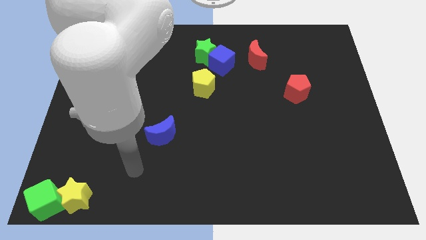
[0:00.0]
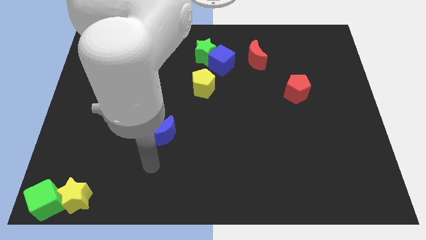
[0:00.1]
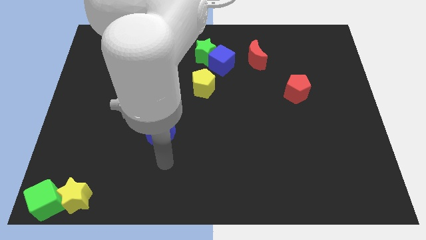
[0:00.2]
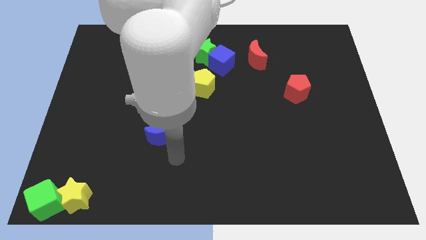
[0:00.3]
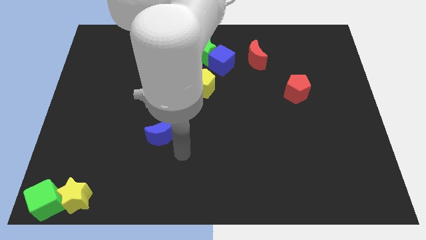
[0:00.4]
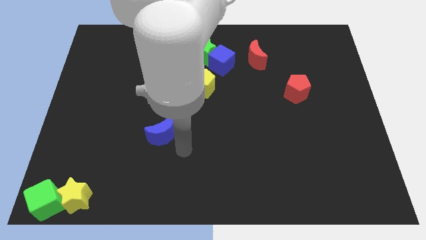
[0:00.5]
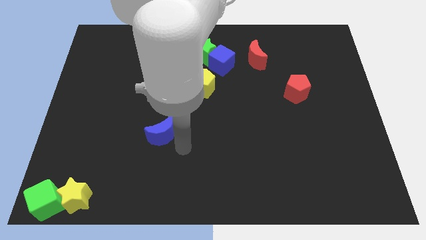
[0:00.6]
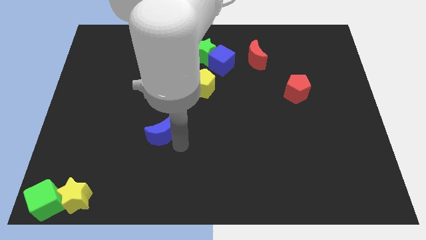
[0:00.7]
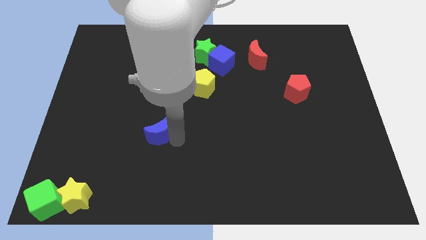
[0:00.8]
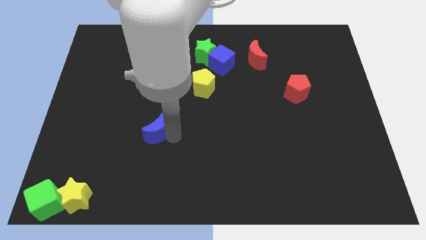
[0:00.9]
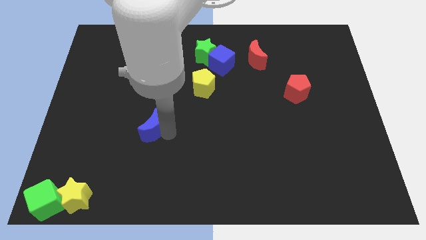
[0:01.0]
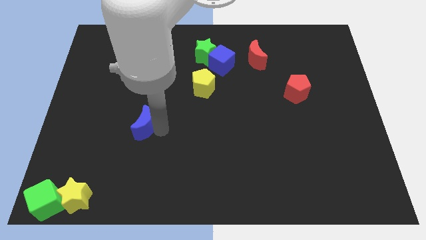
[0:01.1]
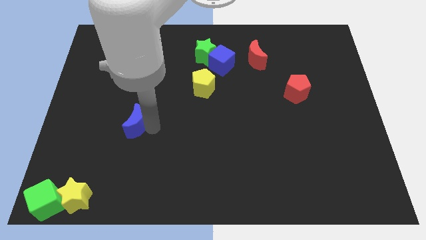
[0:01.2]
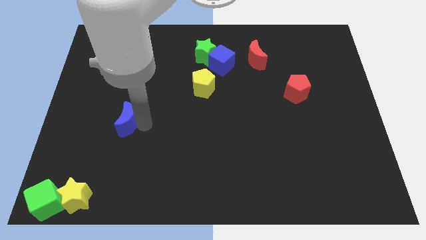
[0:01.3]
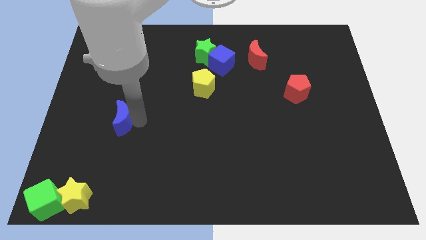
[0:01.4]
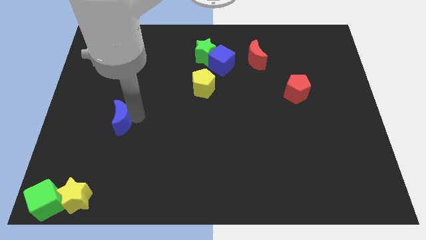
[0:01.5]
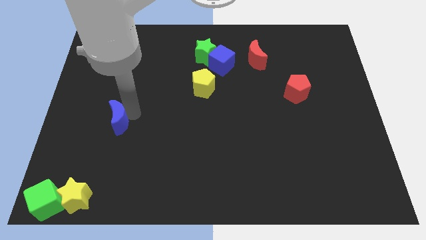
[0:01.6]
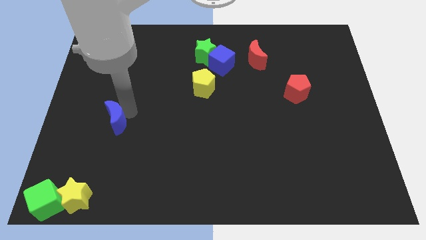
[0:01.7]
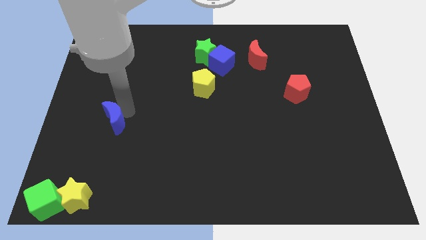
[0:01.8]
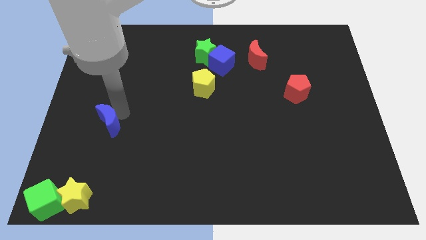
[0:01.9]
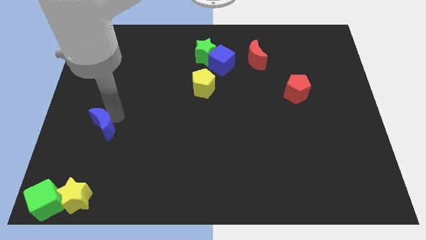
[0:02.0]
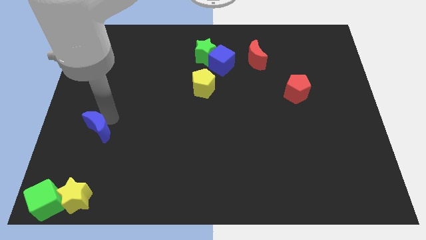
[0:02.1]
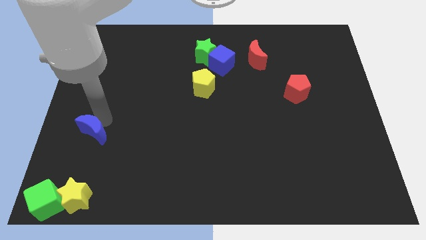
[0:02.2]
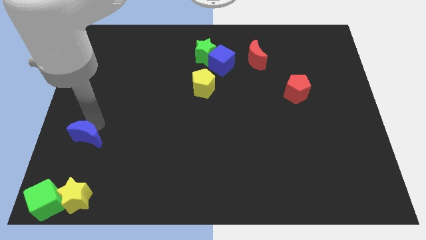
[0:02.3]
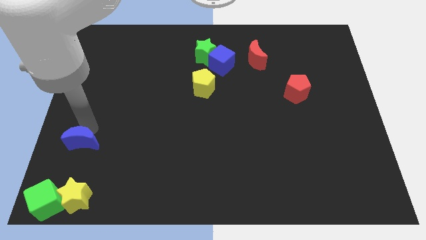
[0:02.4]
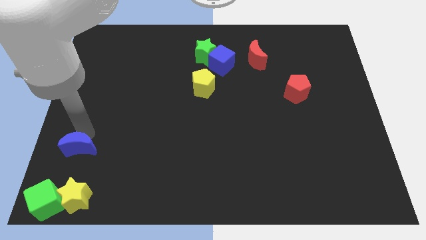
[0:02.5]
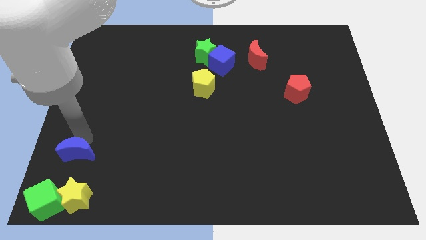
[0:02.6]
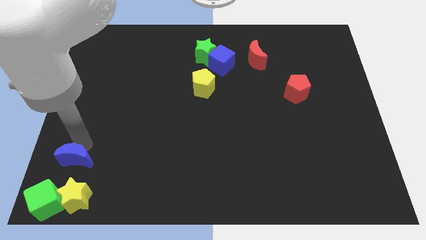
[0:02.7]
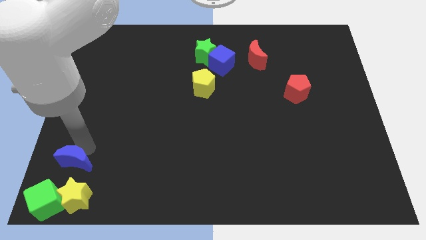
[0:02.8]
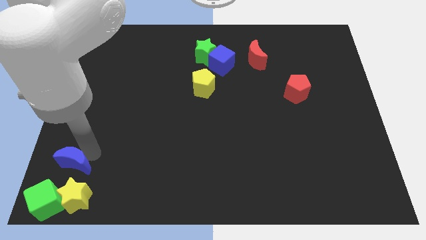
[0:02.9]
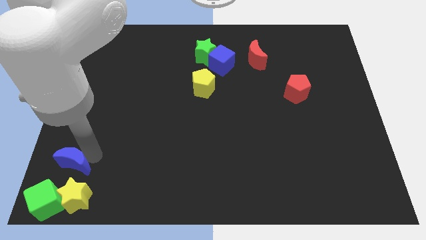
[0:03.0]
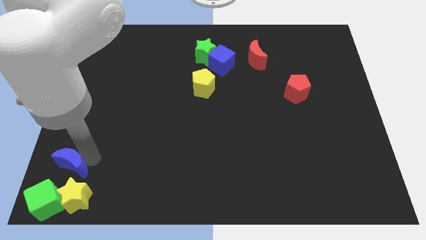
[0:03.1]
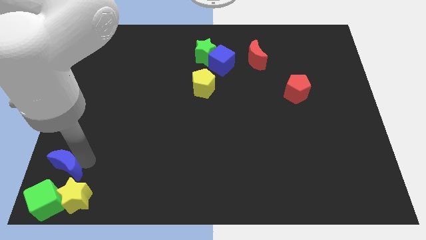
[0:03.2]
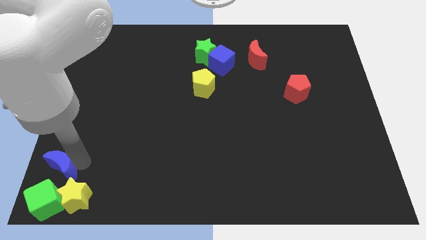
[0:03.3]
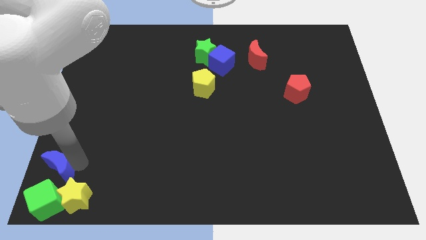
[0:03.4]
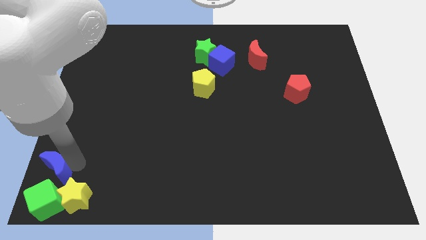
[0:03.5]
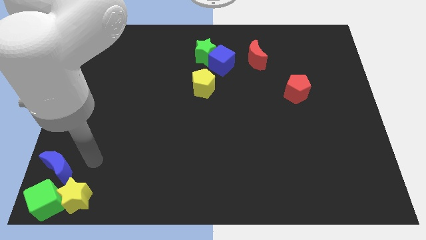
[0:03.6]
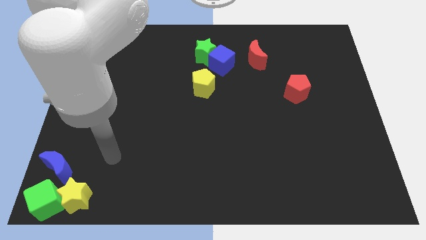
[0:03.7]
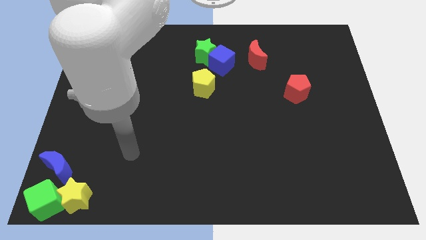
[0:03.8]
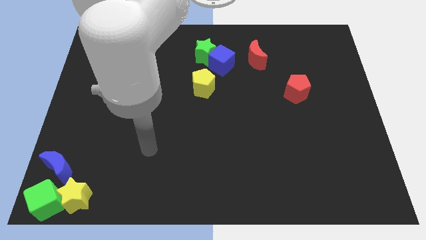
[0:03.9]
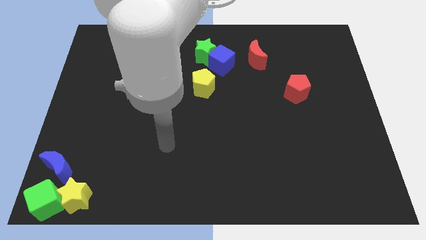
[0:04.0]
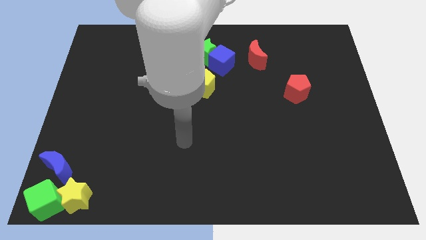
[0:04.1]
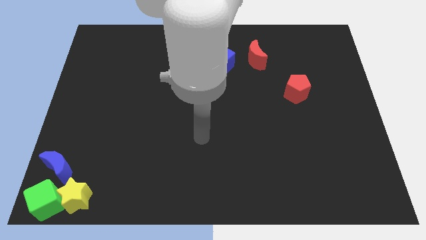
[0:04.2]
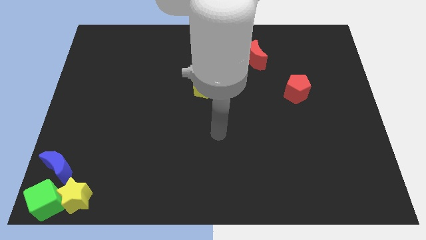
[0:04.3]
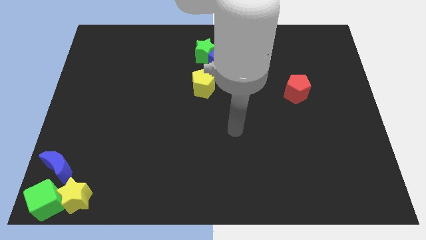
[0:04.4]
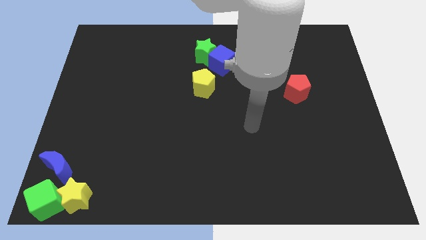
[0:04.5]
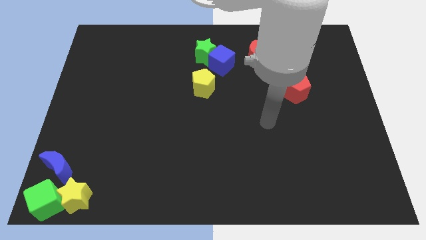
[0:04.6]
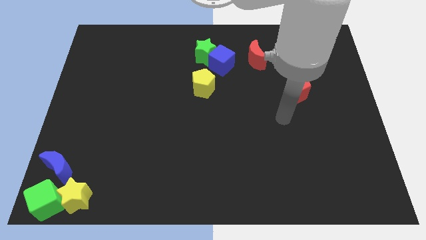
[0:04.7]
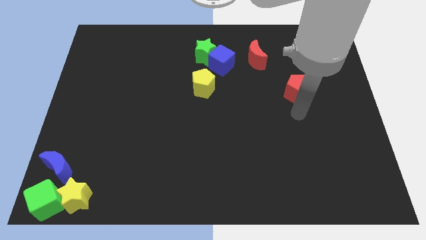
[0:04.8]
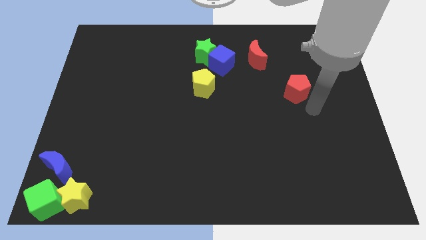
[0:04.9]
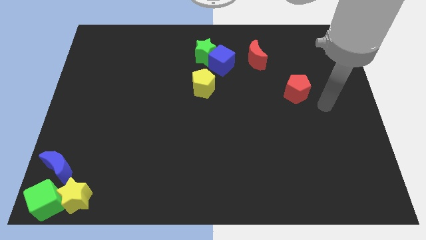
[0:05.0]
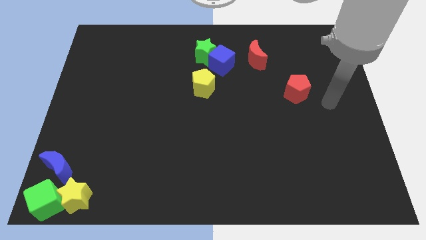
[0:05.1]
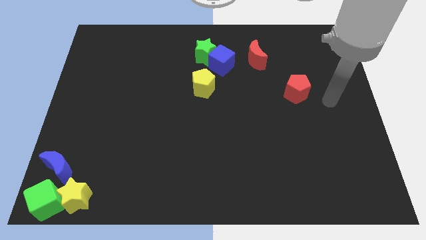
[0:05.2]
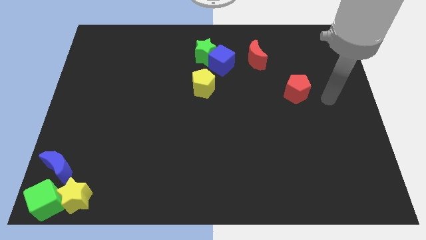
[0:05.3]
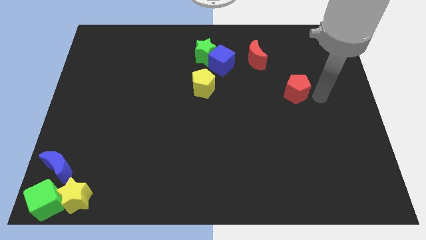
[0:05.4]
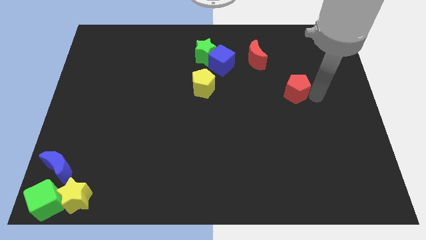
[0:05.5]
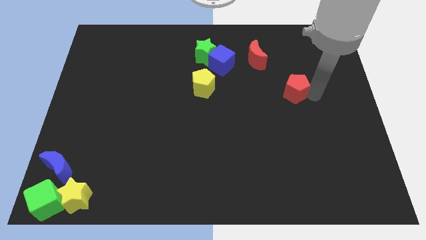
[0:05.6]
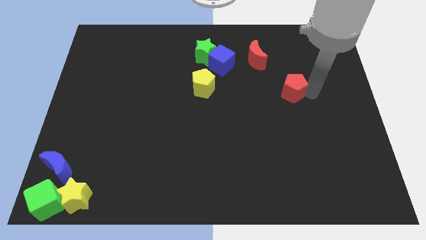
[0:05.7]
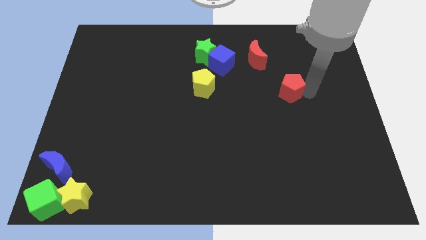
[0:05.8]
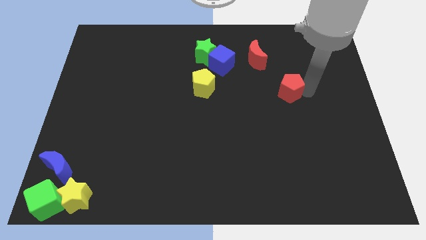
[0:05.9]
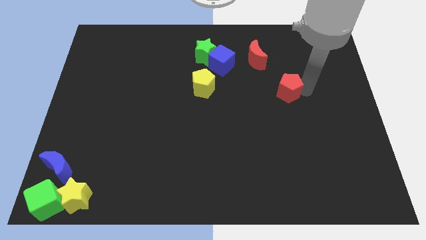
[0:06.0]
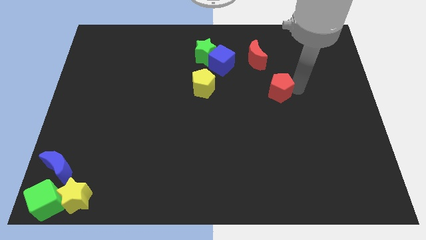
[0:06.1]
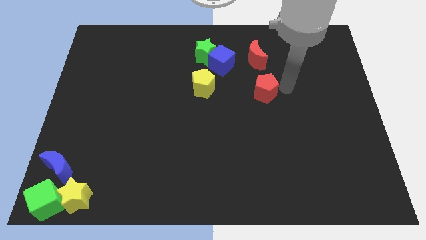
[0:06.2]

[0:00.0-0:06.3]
push the blue moon to the bottom left of the board

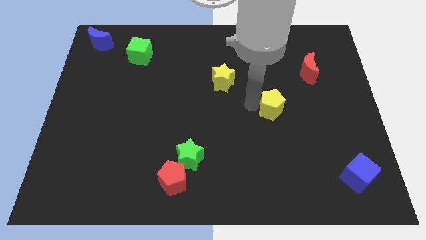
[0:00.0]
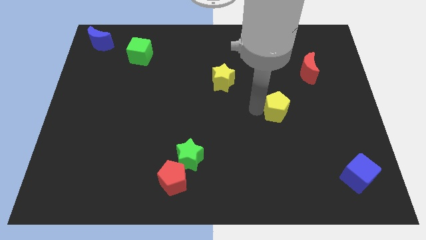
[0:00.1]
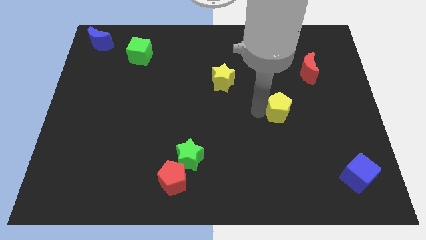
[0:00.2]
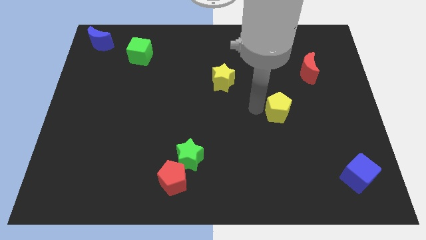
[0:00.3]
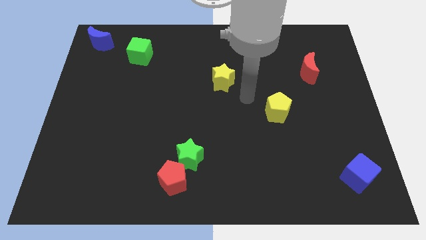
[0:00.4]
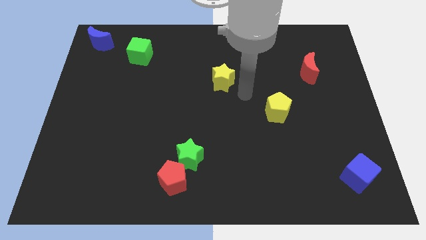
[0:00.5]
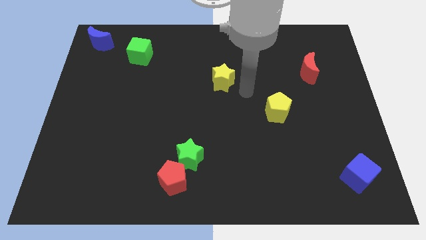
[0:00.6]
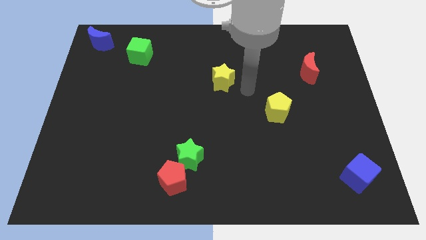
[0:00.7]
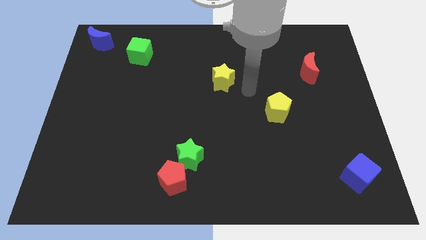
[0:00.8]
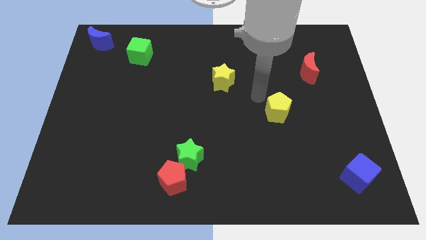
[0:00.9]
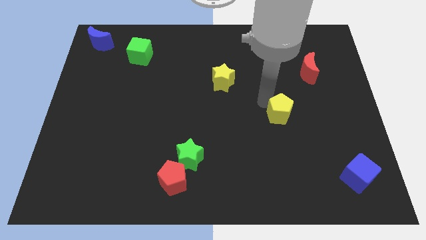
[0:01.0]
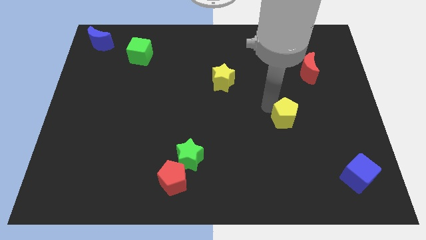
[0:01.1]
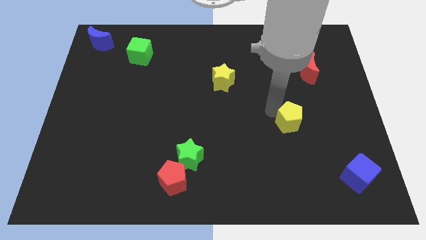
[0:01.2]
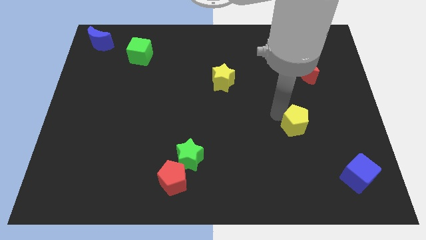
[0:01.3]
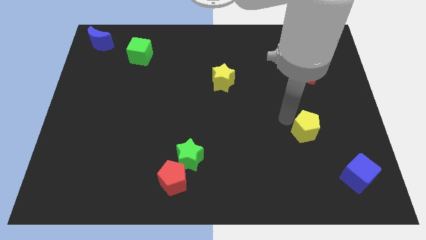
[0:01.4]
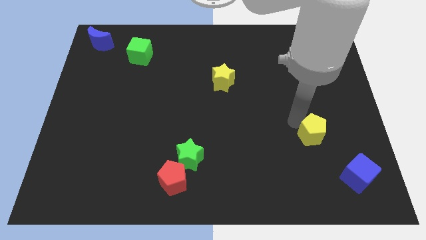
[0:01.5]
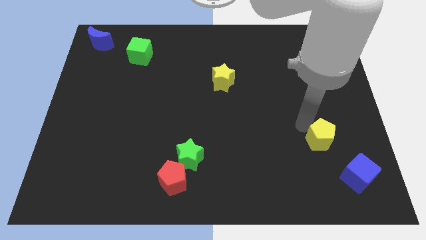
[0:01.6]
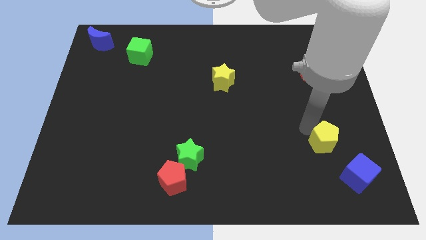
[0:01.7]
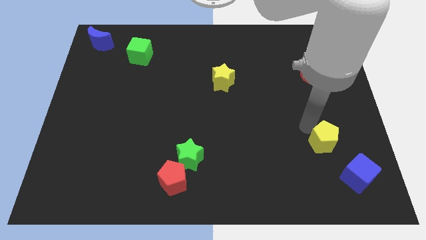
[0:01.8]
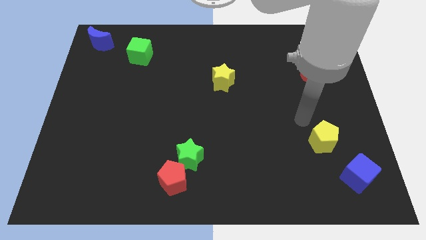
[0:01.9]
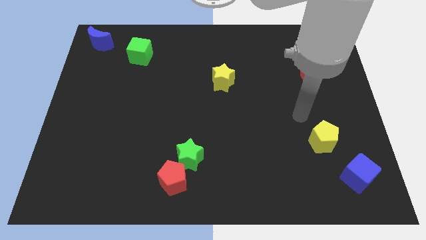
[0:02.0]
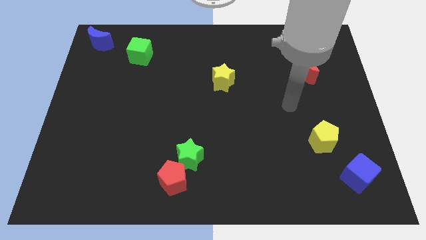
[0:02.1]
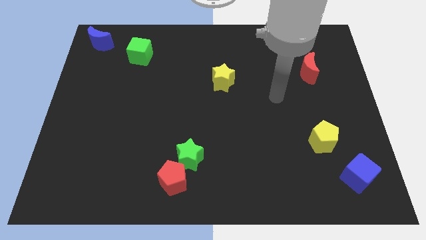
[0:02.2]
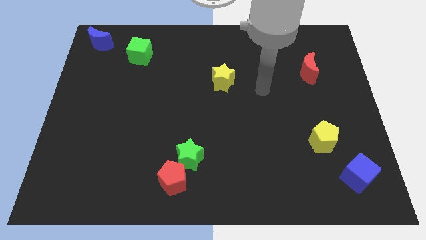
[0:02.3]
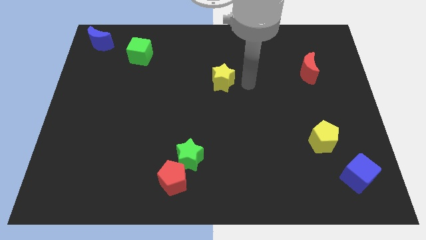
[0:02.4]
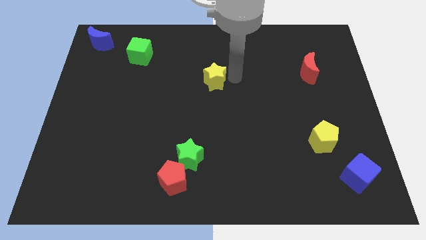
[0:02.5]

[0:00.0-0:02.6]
push yellow pentagon towards blue cube

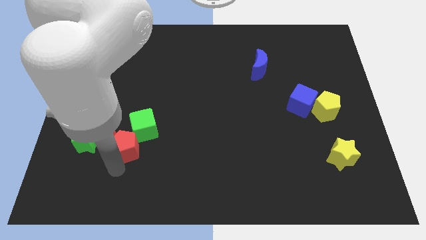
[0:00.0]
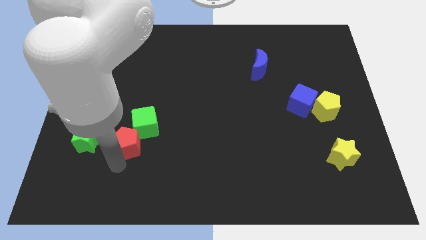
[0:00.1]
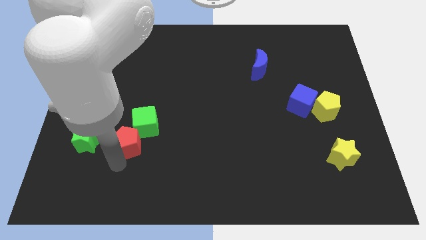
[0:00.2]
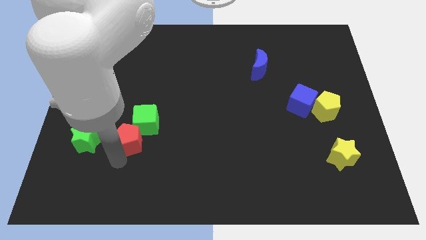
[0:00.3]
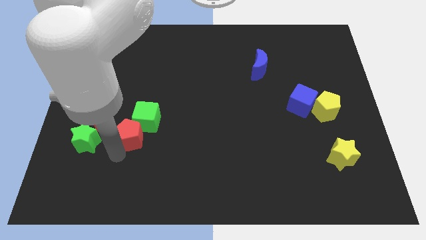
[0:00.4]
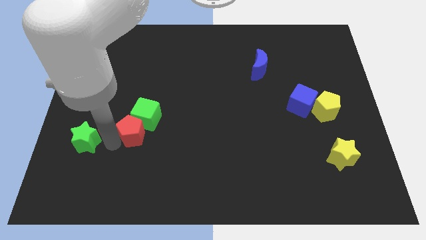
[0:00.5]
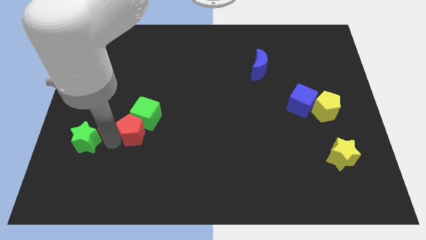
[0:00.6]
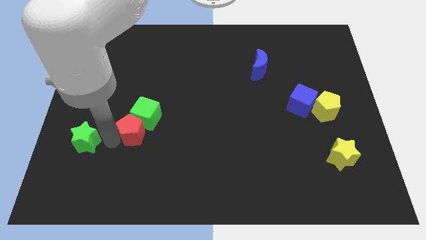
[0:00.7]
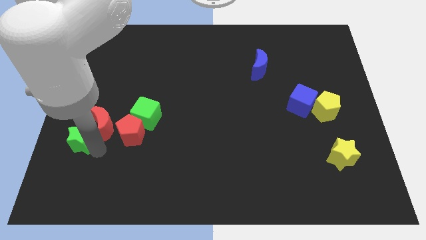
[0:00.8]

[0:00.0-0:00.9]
place red pentagon to the right of red moon
